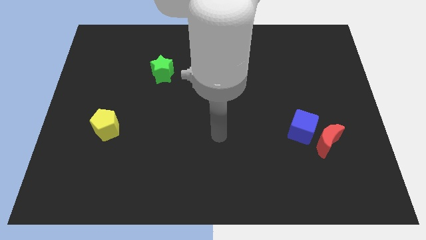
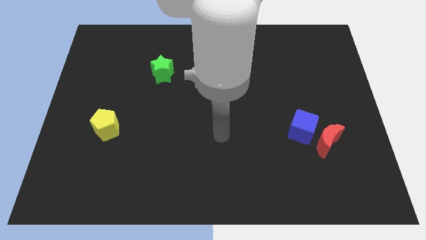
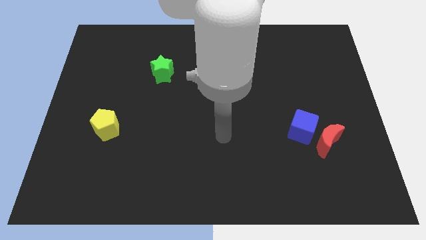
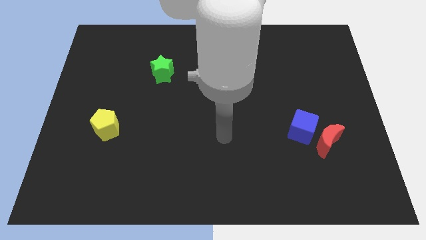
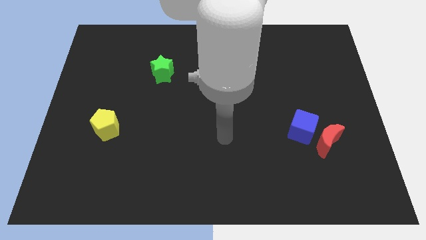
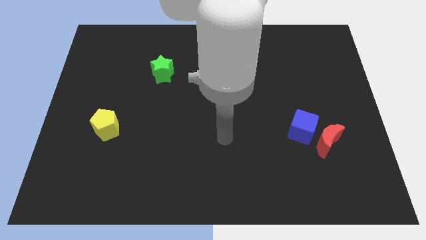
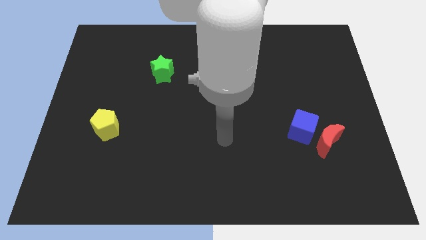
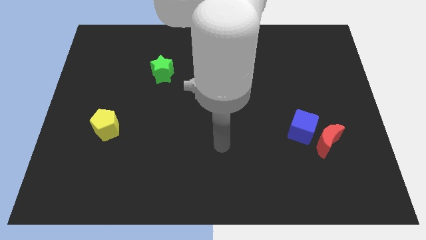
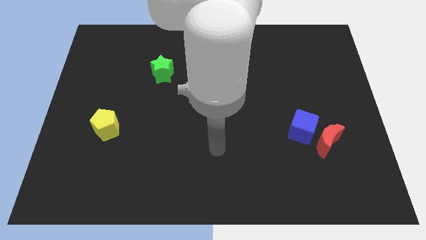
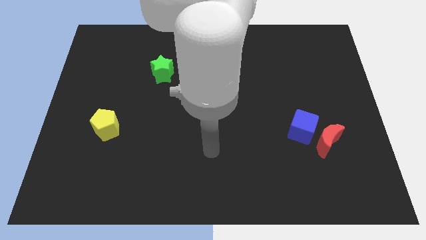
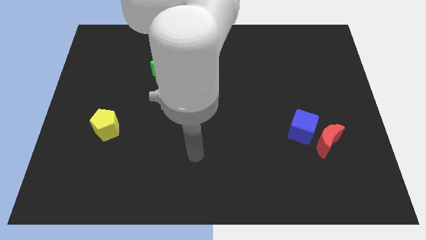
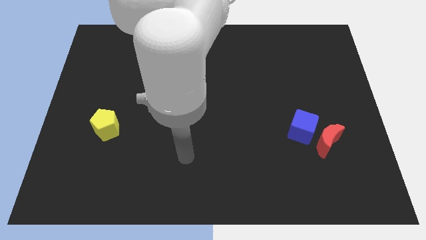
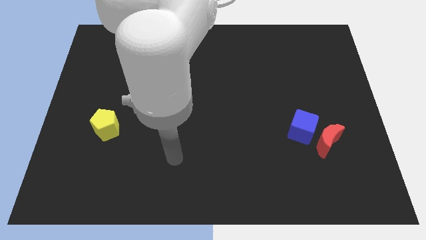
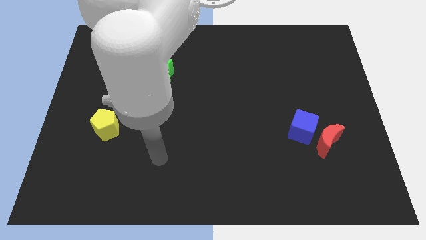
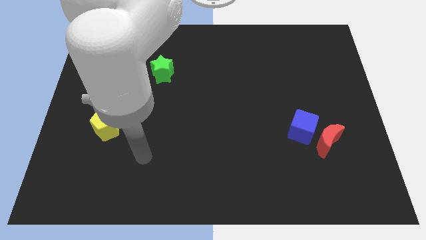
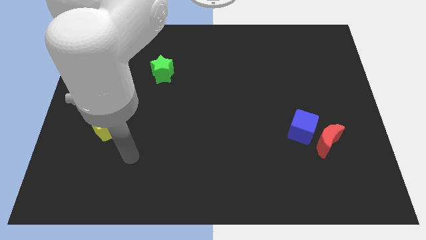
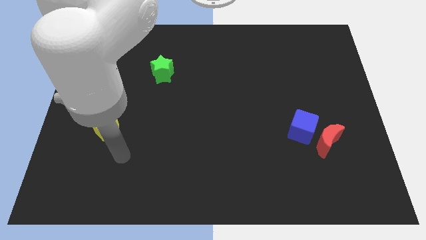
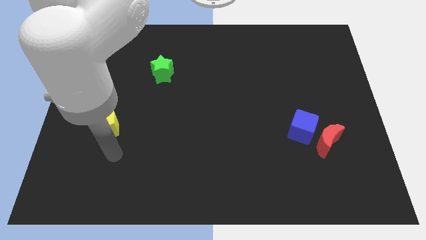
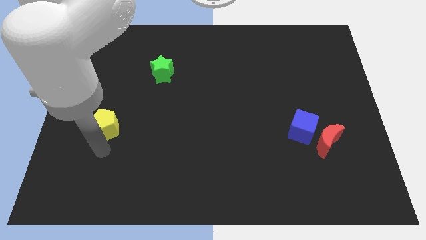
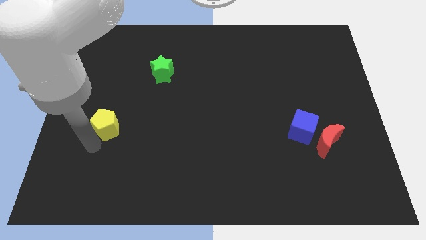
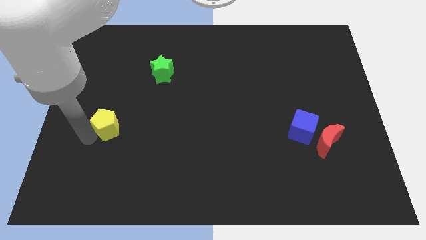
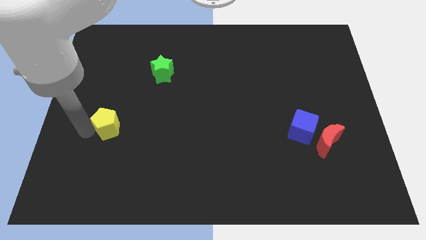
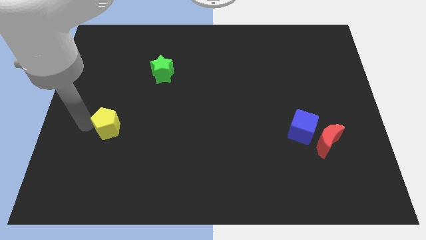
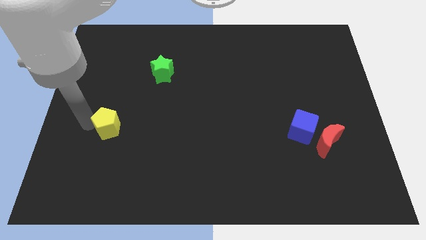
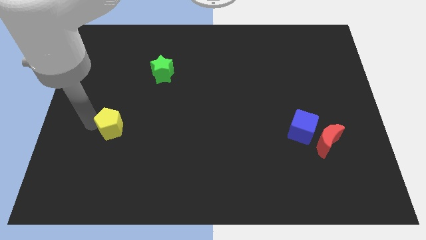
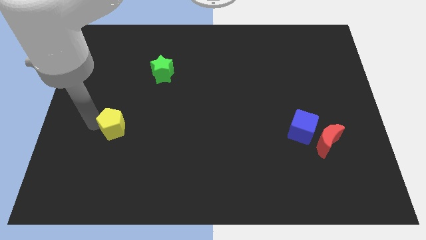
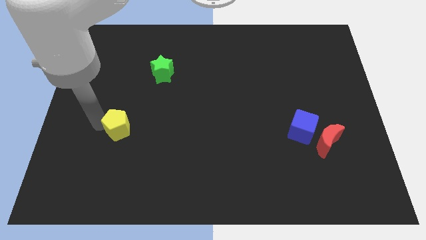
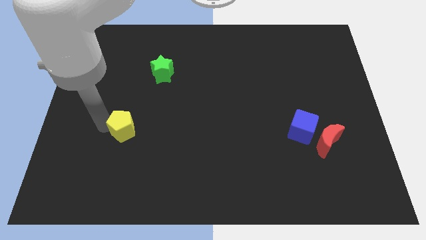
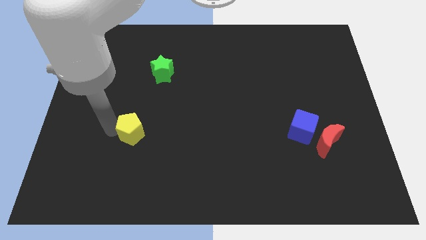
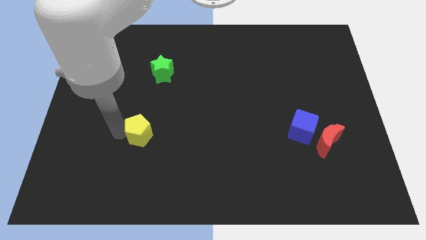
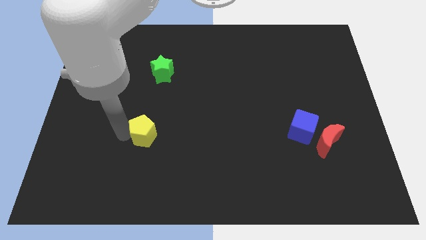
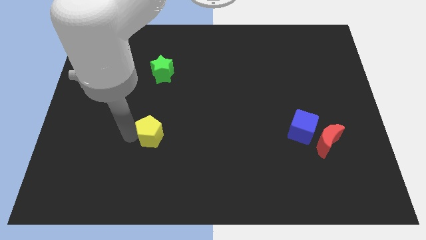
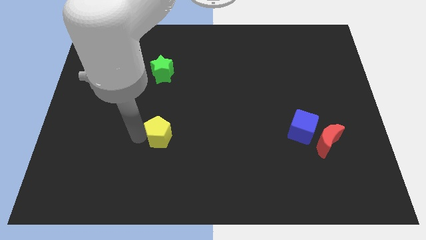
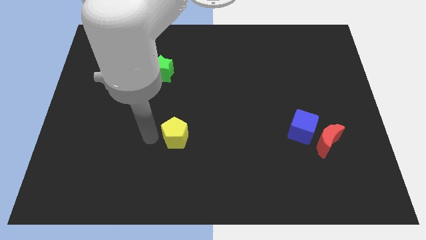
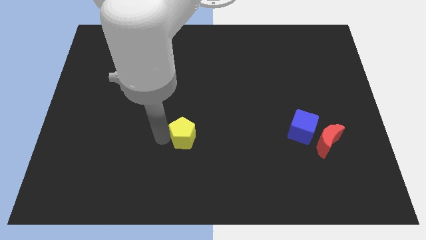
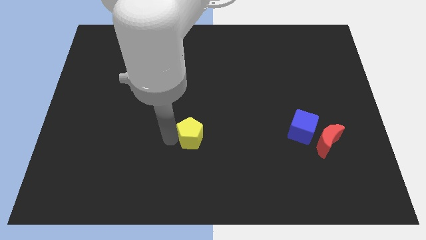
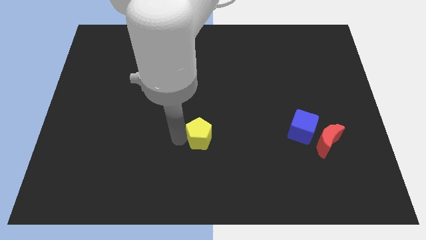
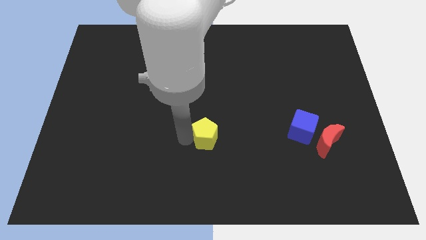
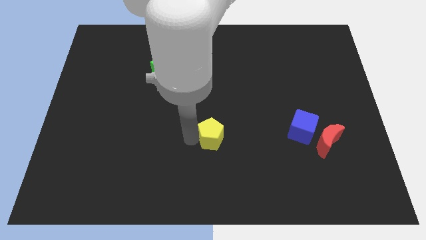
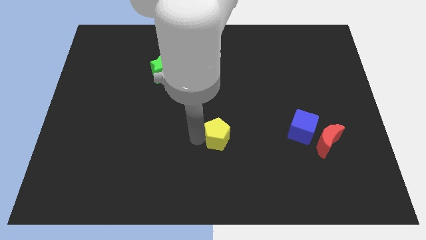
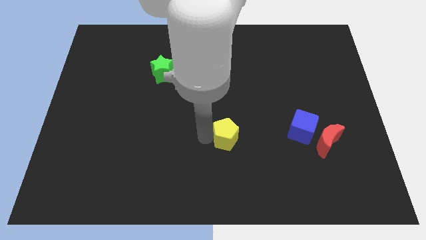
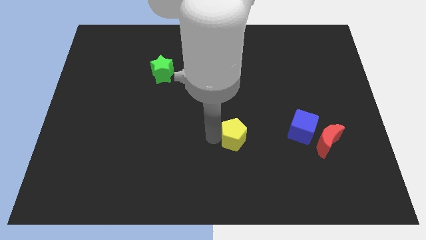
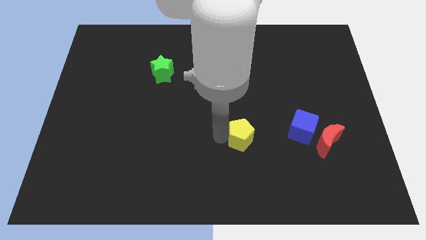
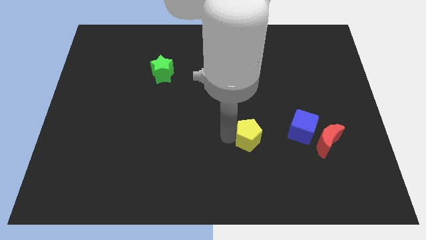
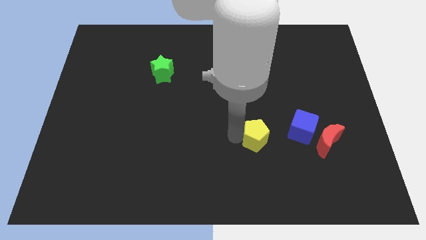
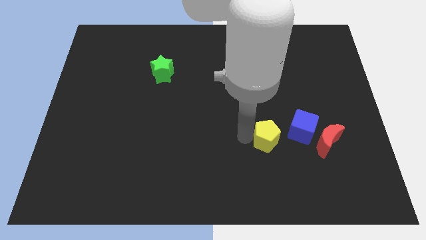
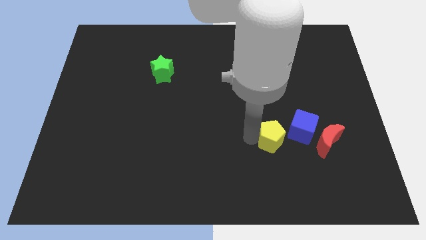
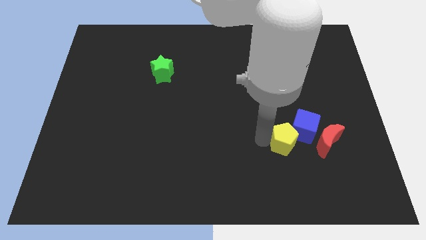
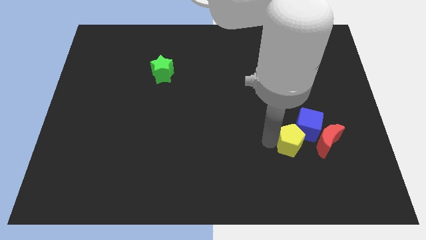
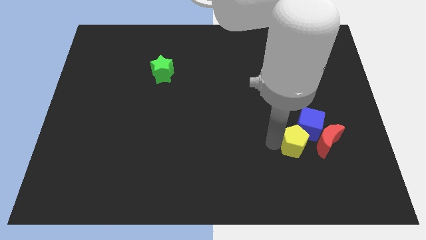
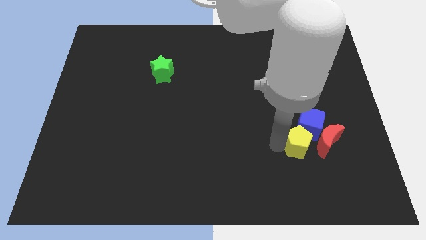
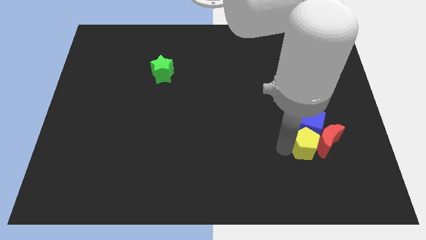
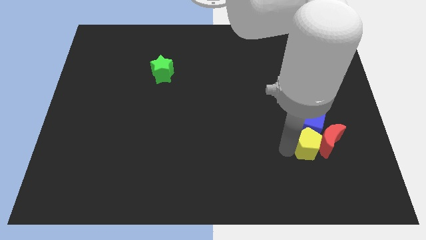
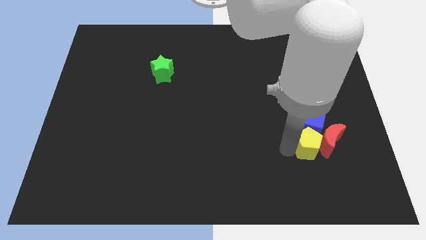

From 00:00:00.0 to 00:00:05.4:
push the pentagon next to the red block

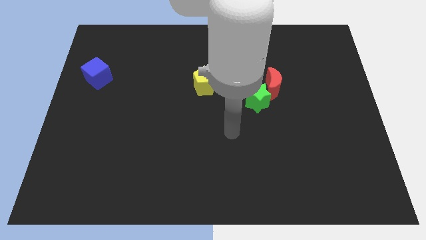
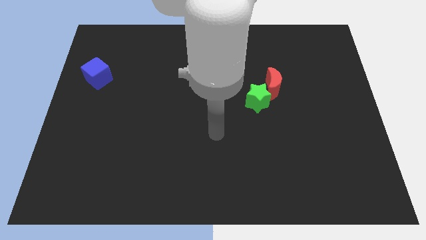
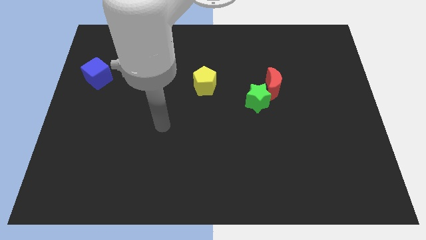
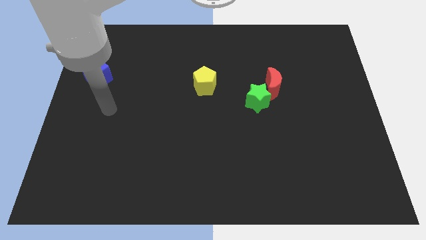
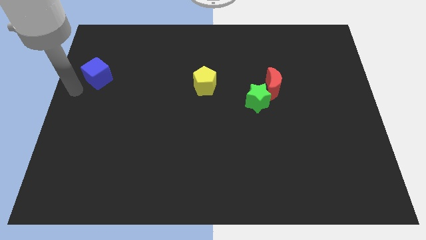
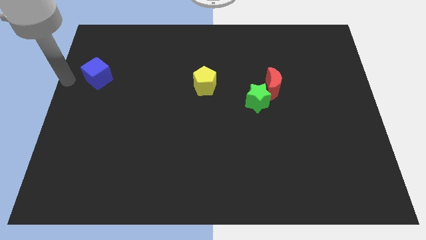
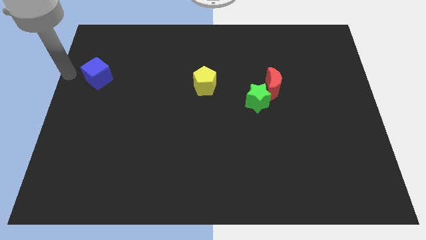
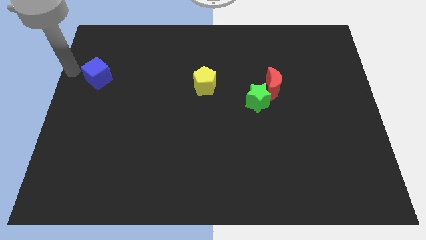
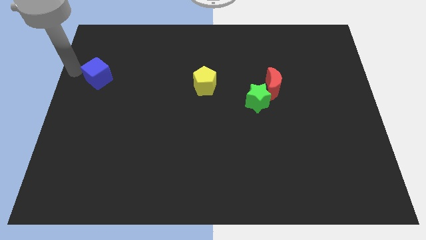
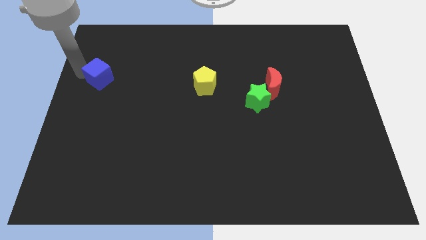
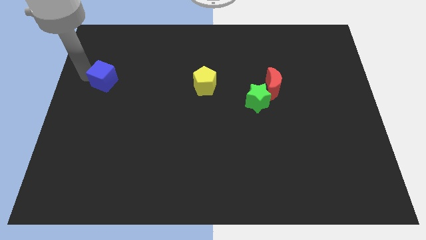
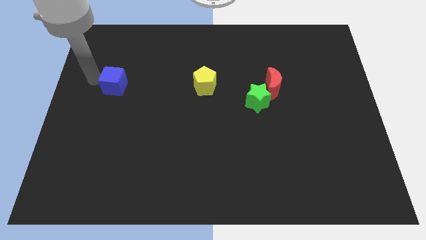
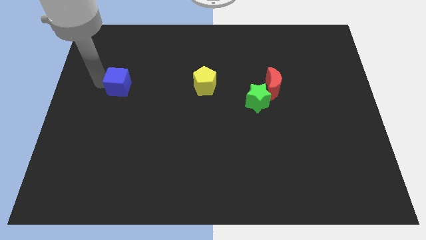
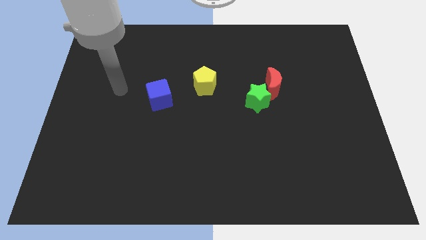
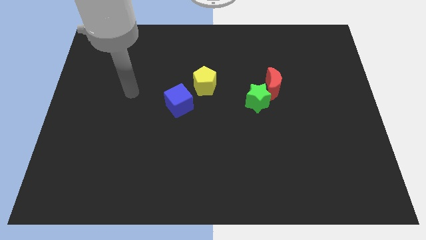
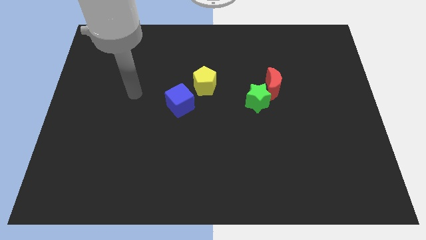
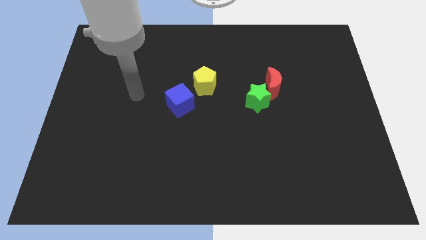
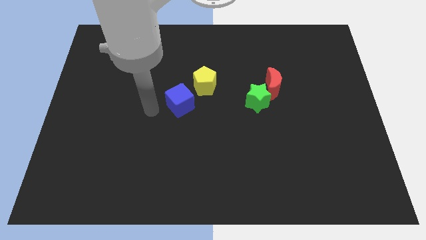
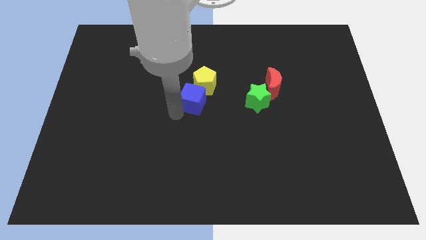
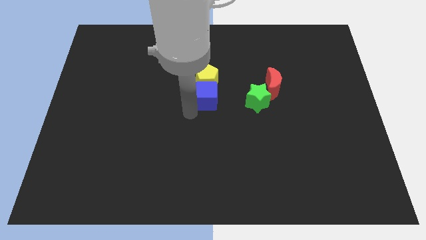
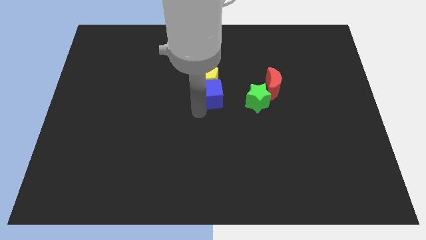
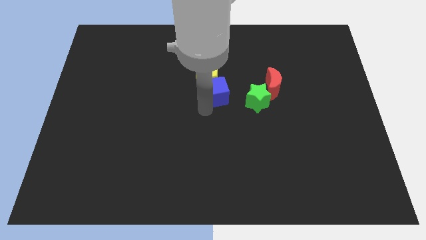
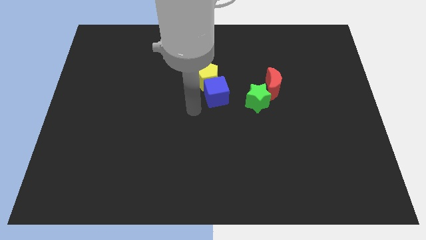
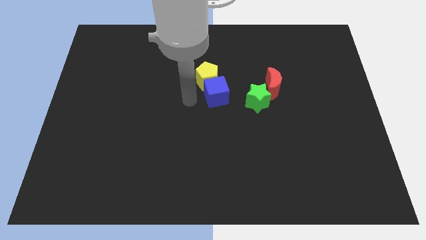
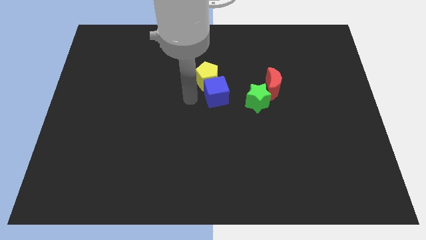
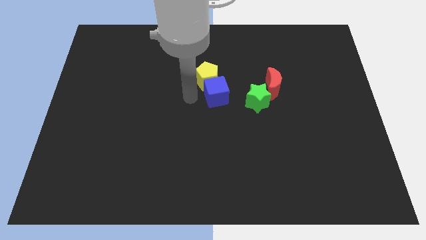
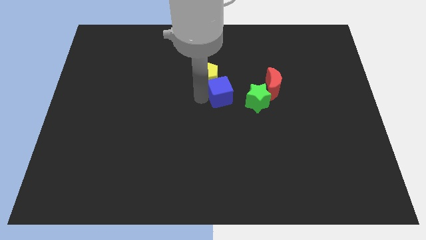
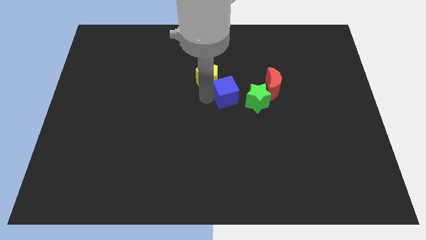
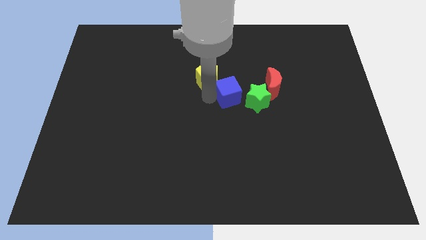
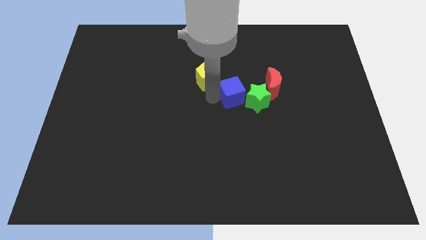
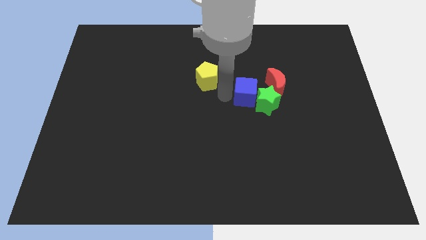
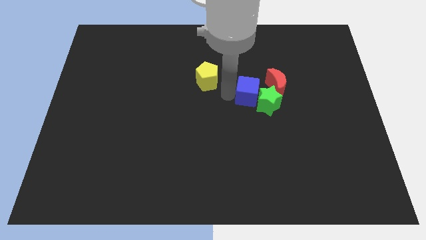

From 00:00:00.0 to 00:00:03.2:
push the blue block to the green star
